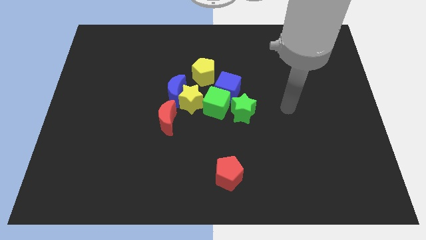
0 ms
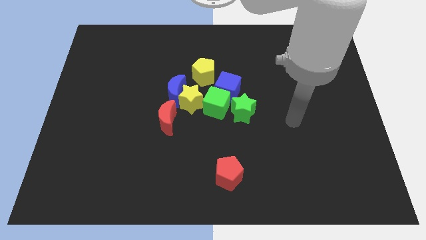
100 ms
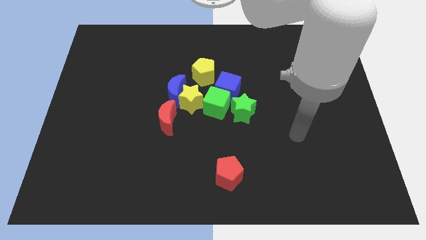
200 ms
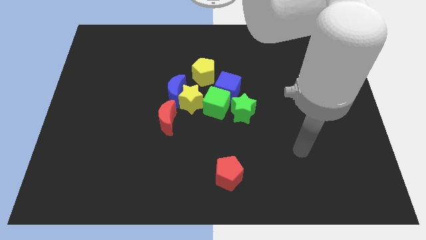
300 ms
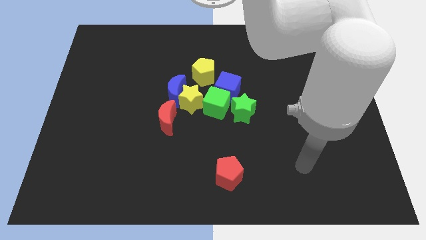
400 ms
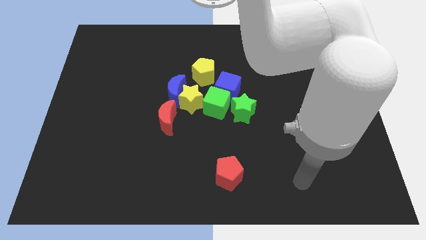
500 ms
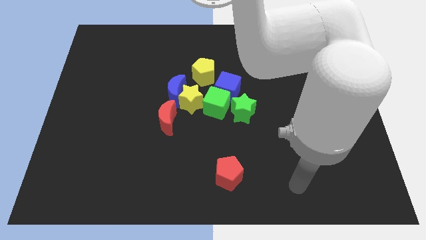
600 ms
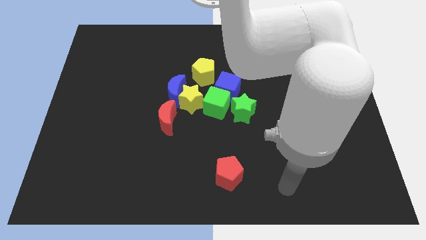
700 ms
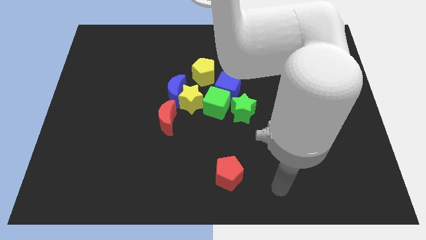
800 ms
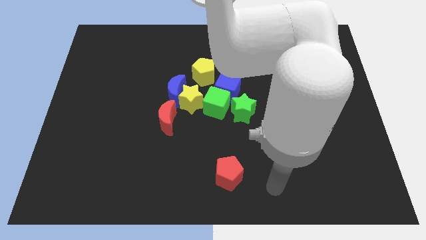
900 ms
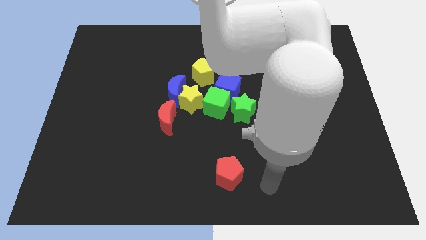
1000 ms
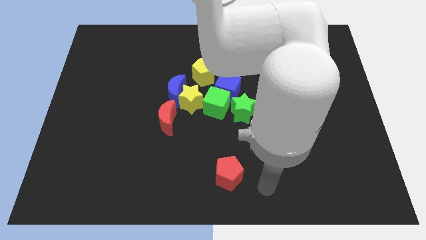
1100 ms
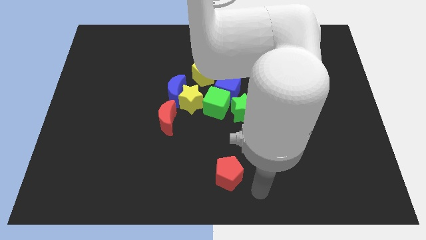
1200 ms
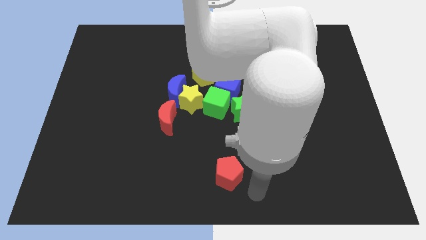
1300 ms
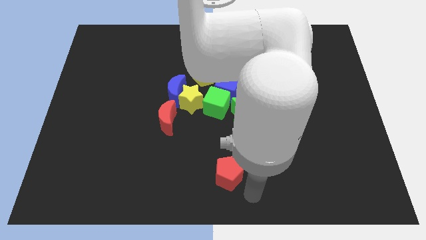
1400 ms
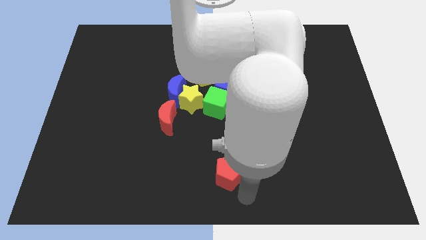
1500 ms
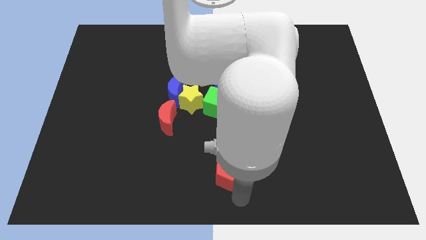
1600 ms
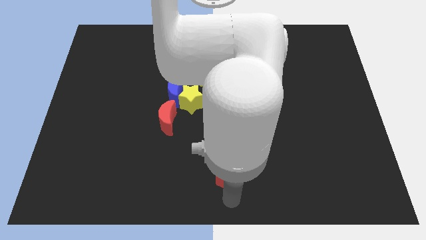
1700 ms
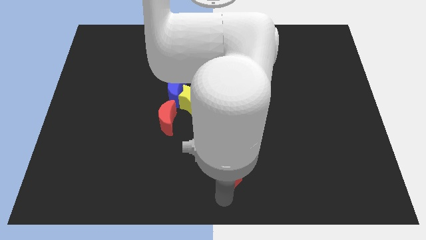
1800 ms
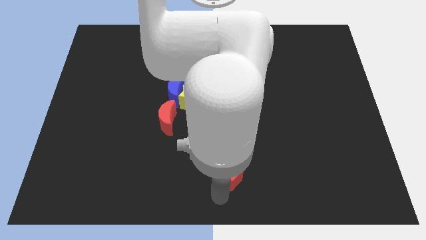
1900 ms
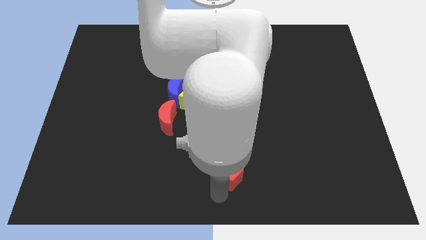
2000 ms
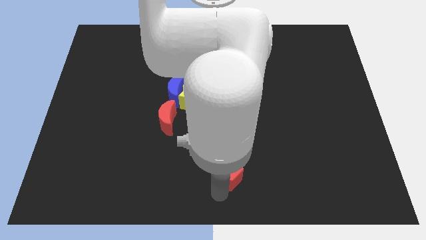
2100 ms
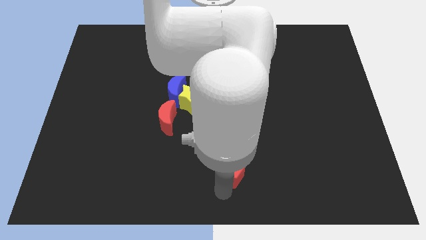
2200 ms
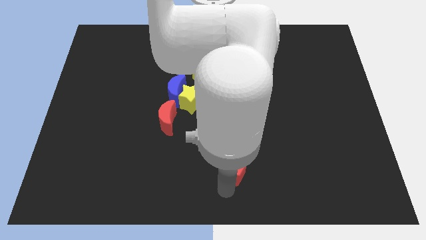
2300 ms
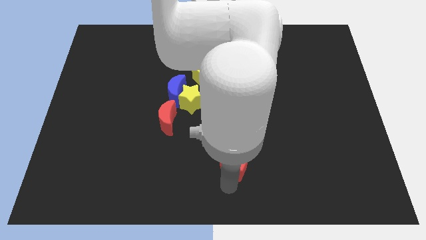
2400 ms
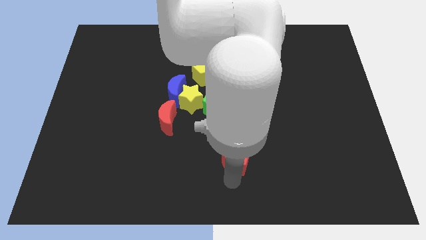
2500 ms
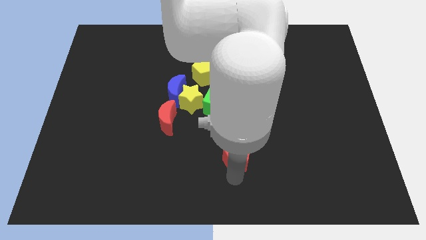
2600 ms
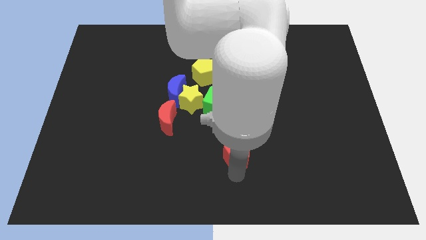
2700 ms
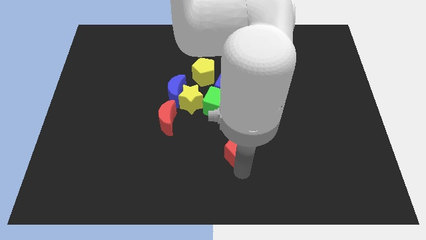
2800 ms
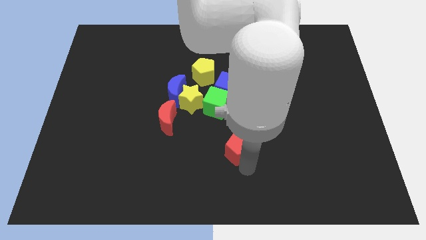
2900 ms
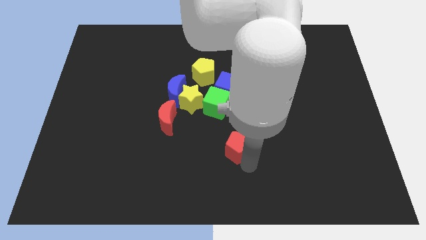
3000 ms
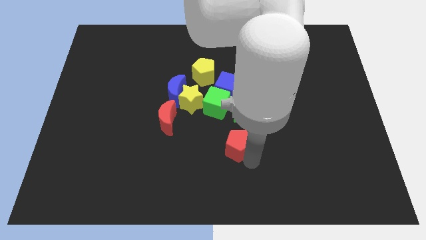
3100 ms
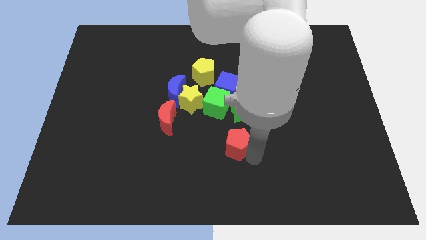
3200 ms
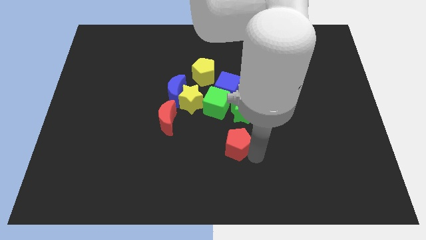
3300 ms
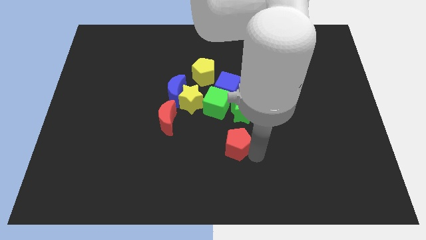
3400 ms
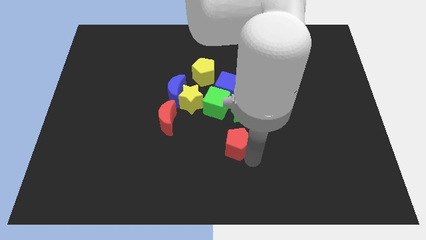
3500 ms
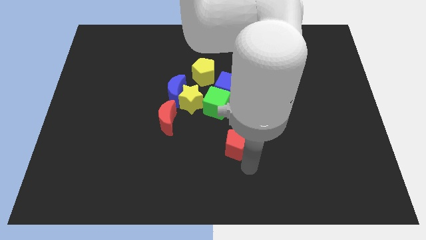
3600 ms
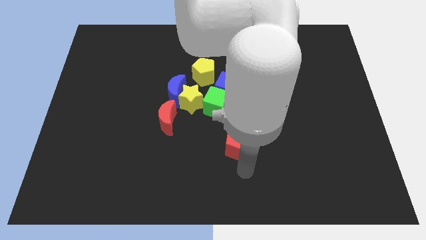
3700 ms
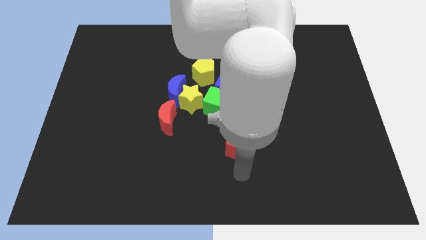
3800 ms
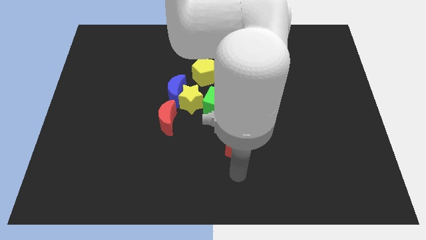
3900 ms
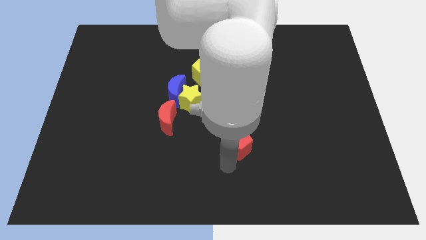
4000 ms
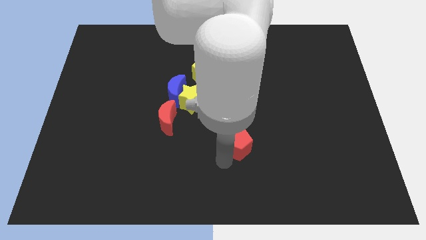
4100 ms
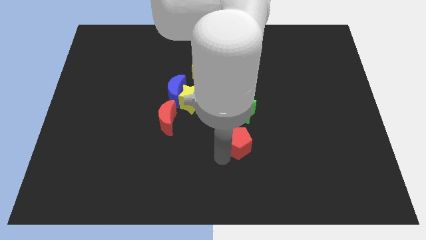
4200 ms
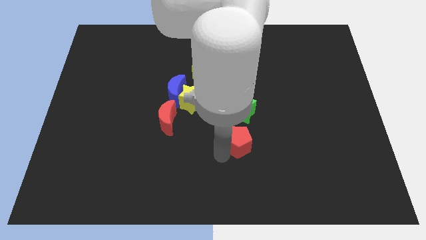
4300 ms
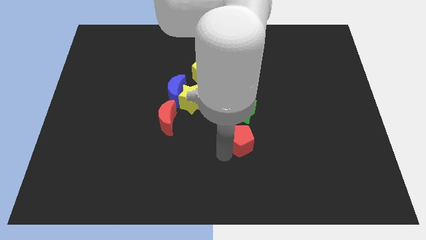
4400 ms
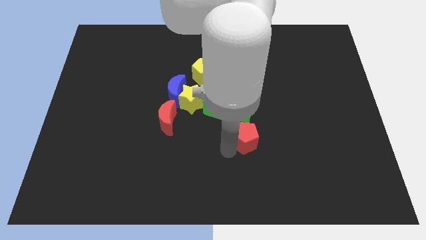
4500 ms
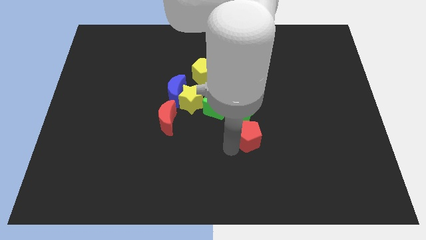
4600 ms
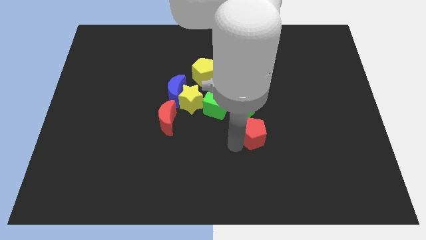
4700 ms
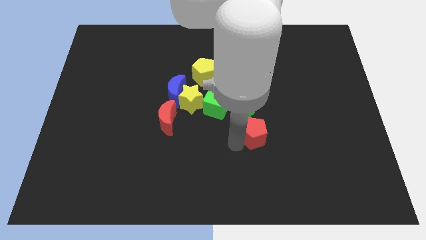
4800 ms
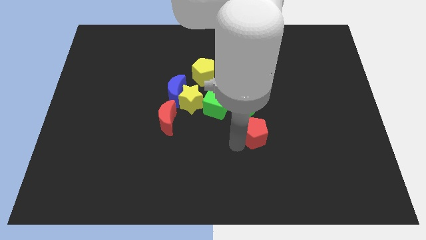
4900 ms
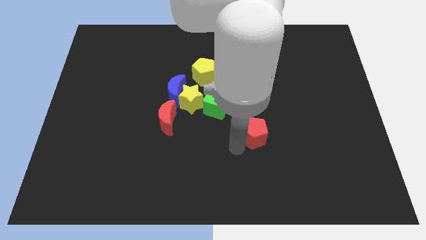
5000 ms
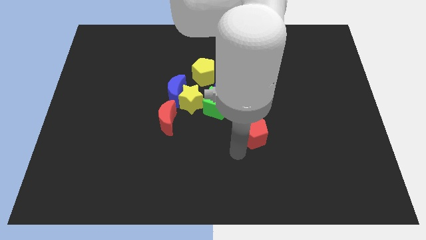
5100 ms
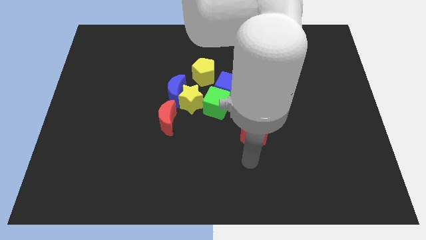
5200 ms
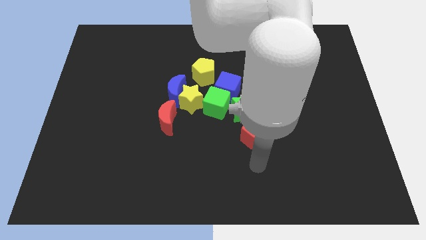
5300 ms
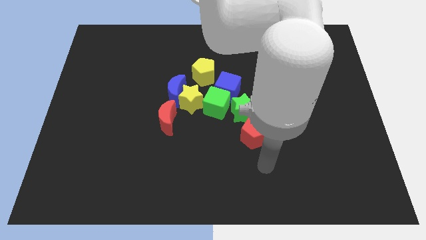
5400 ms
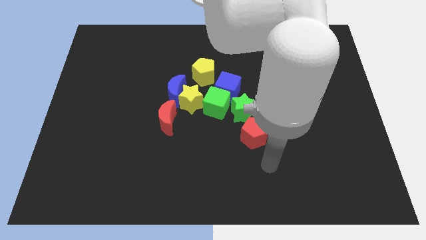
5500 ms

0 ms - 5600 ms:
push the red pentagon below the green star

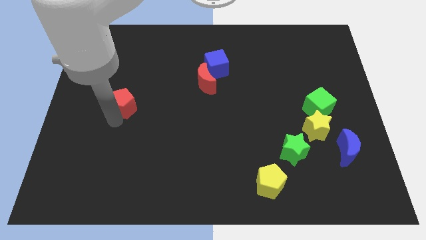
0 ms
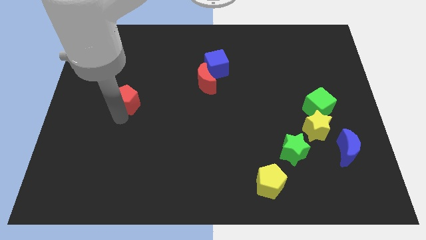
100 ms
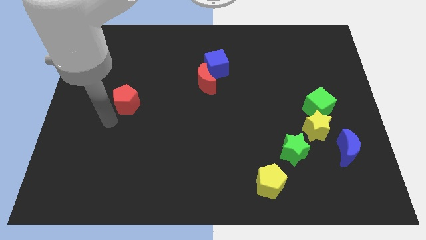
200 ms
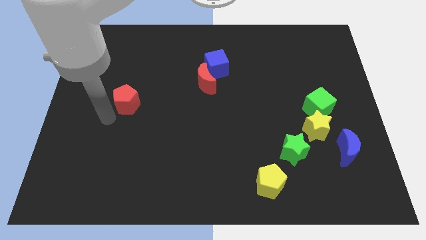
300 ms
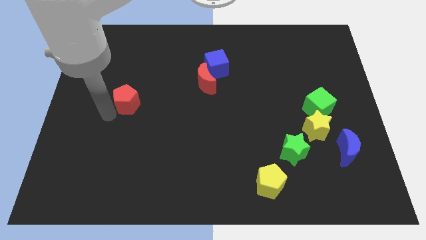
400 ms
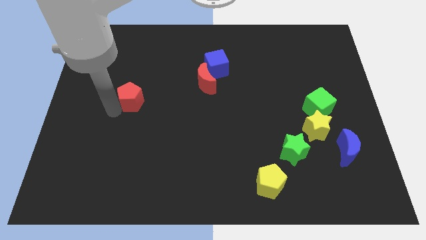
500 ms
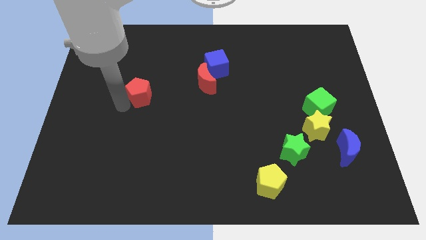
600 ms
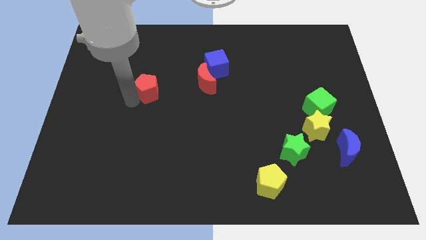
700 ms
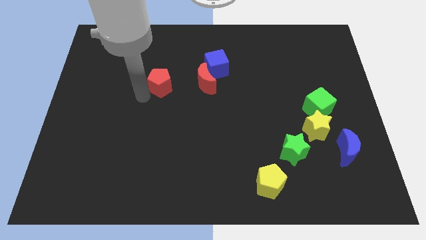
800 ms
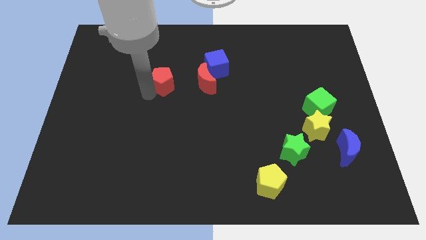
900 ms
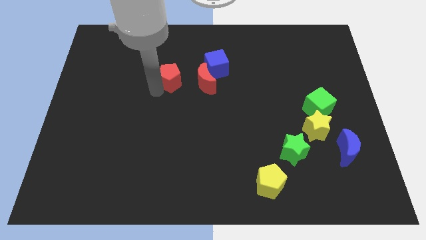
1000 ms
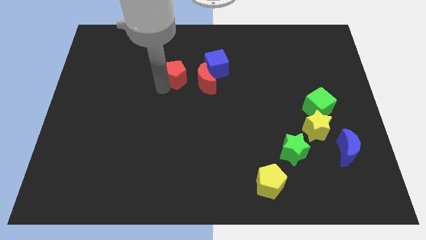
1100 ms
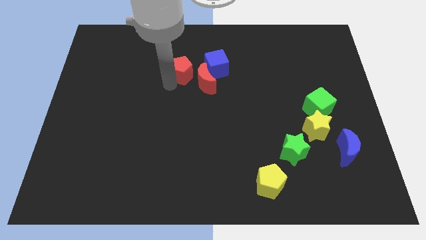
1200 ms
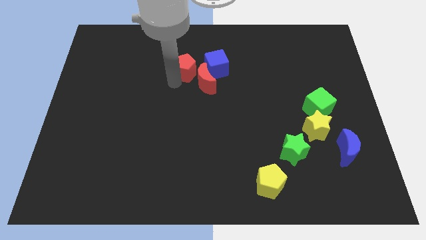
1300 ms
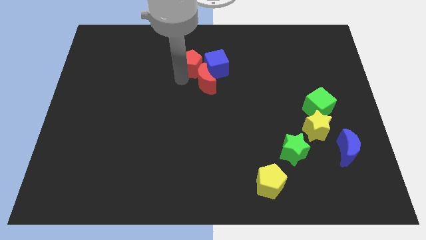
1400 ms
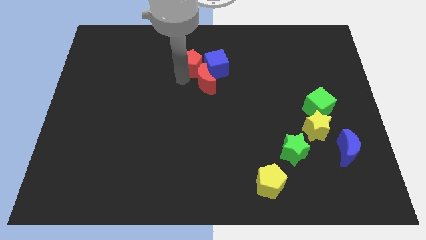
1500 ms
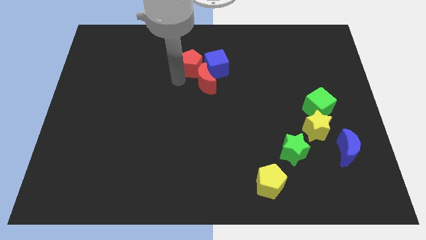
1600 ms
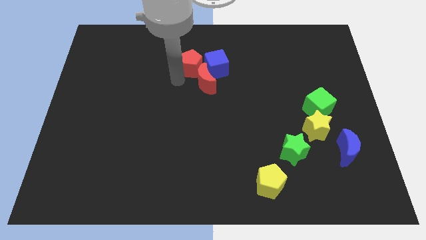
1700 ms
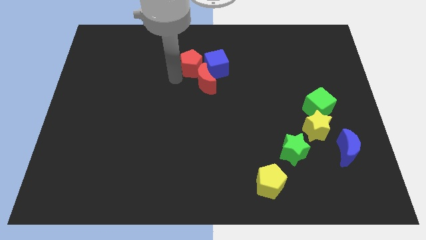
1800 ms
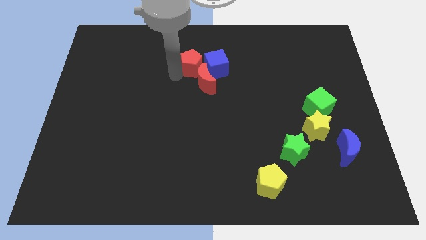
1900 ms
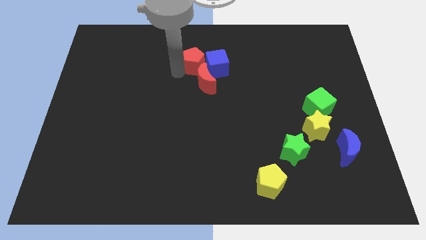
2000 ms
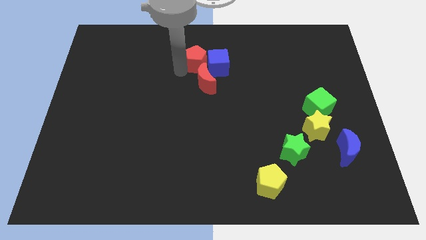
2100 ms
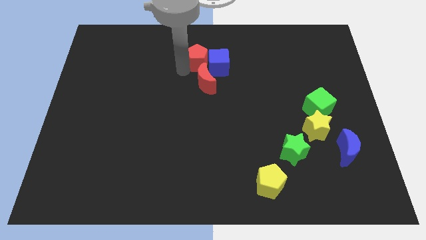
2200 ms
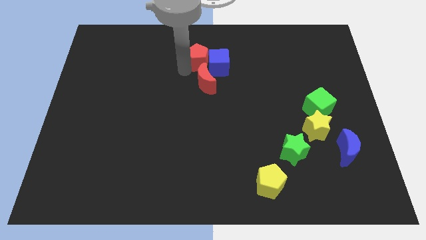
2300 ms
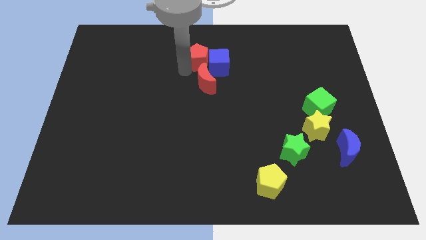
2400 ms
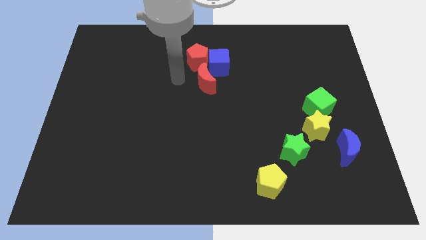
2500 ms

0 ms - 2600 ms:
move the red pentagon into the blue cube

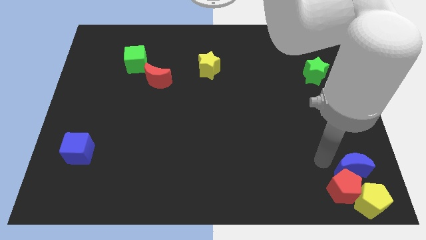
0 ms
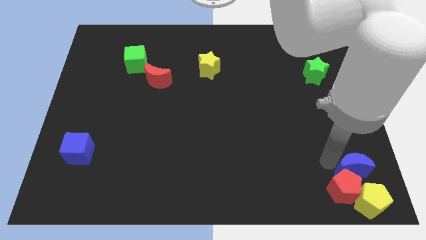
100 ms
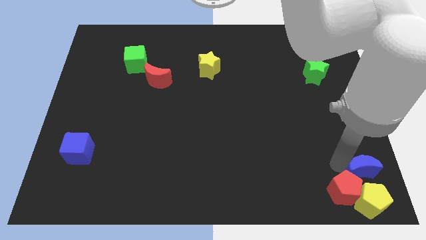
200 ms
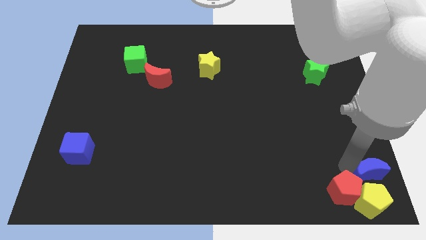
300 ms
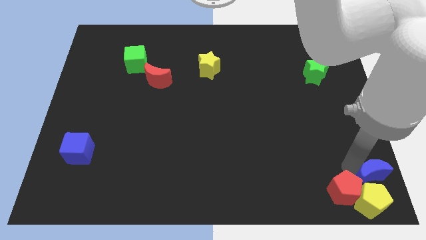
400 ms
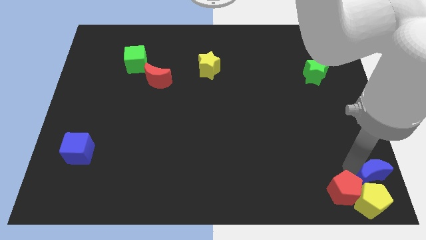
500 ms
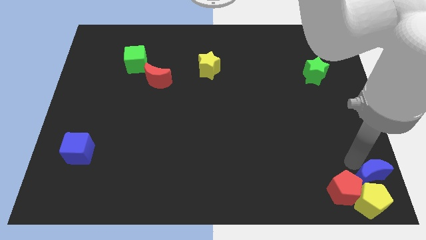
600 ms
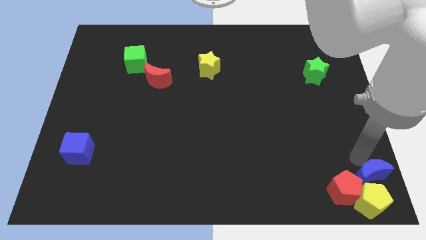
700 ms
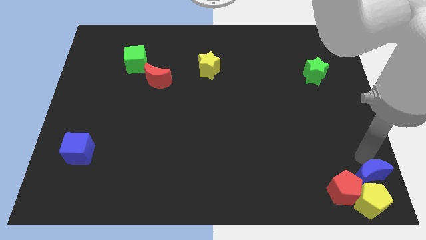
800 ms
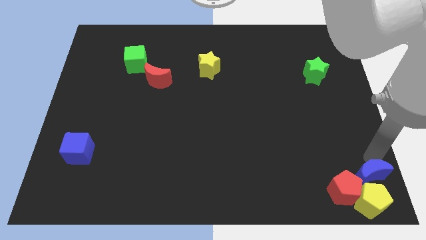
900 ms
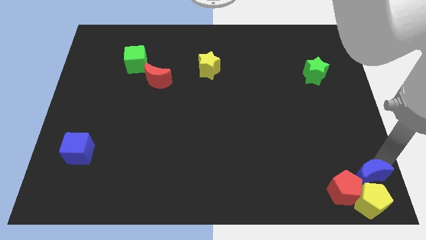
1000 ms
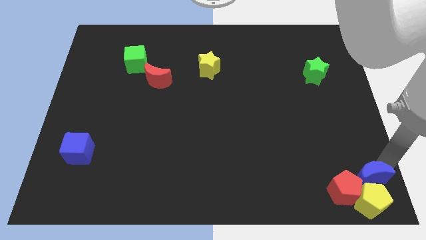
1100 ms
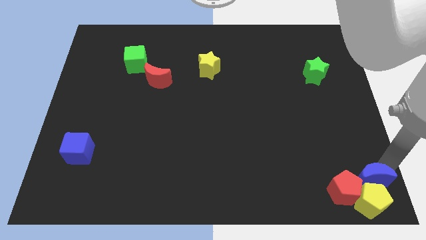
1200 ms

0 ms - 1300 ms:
place the blue moon at the top of yellow pentagon
